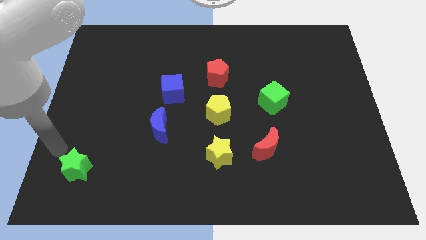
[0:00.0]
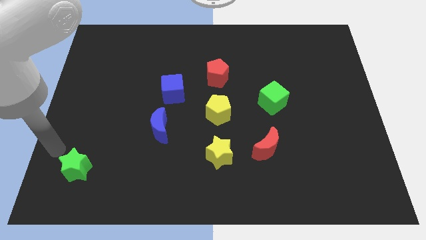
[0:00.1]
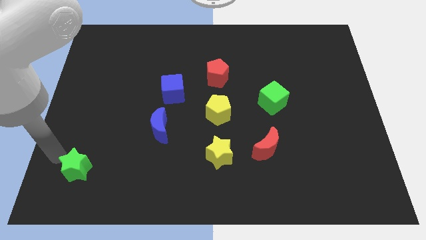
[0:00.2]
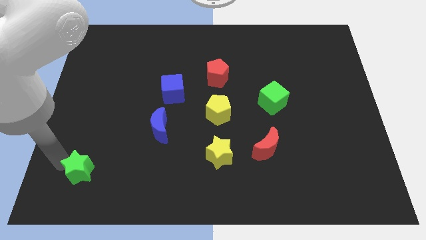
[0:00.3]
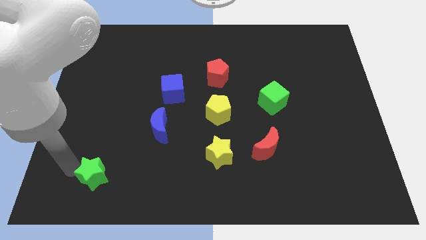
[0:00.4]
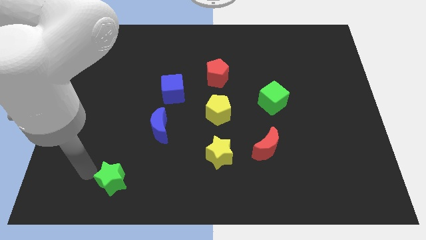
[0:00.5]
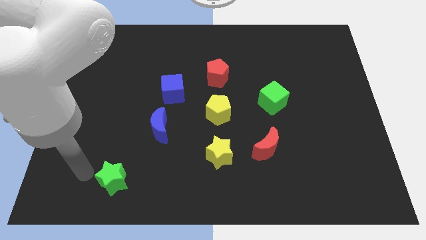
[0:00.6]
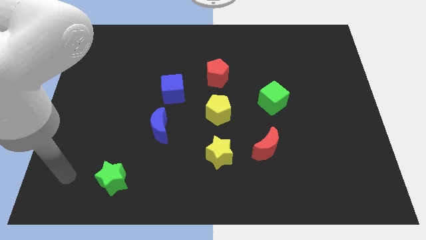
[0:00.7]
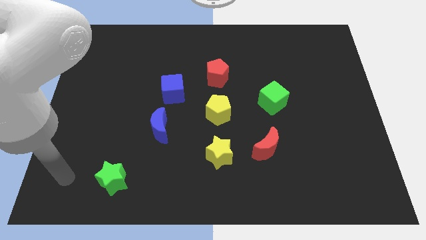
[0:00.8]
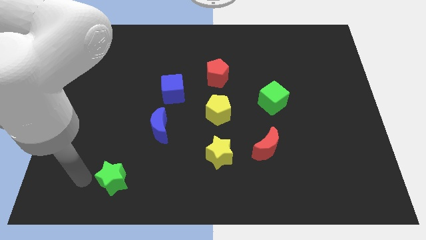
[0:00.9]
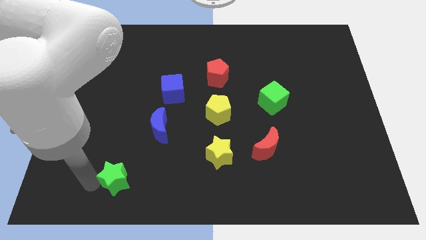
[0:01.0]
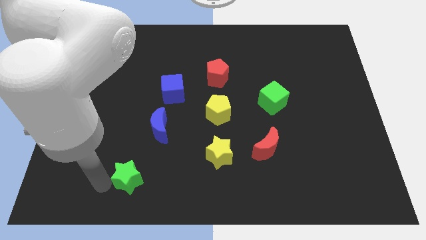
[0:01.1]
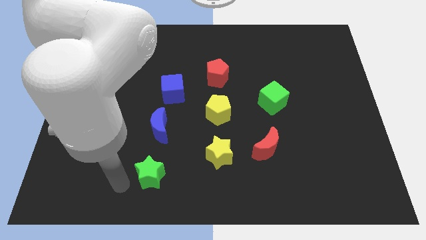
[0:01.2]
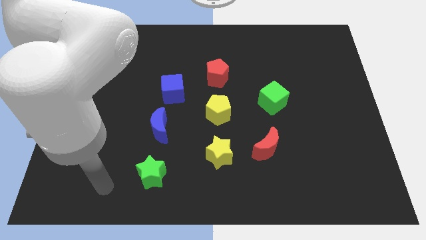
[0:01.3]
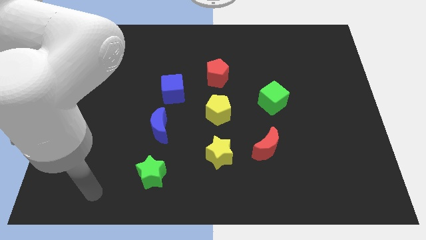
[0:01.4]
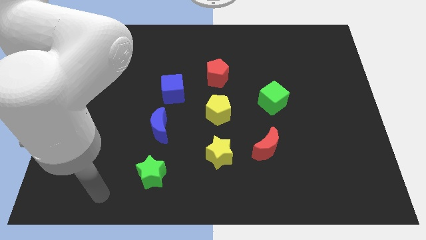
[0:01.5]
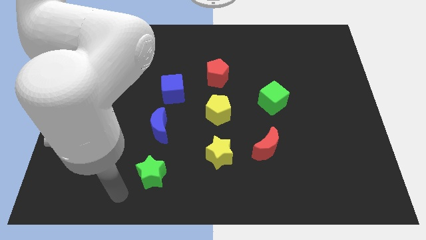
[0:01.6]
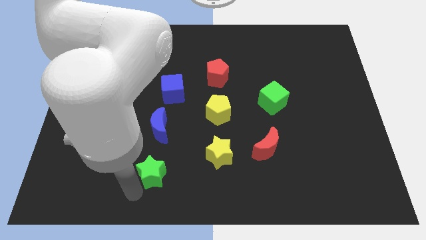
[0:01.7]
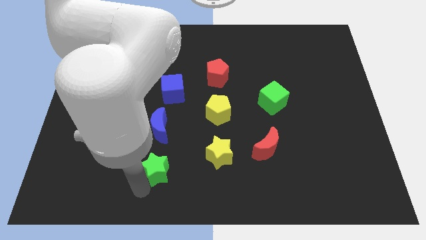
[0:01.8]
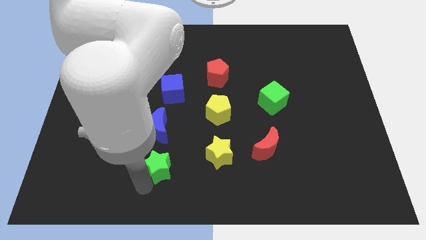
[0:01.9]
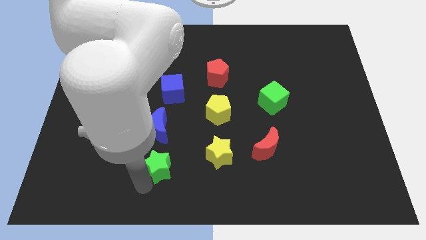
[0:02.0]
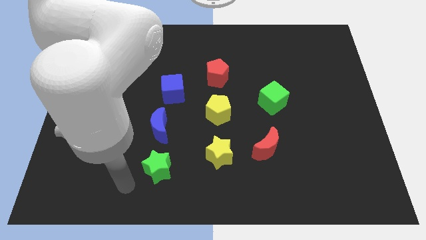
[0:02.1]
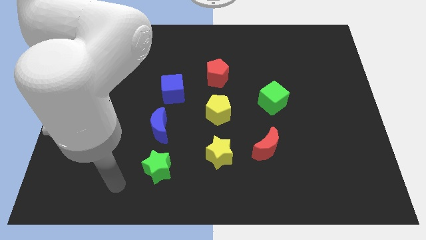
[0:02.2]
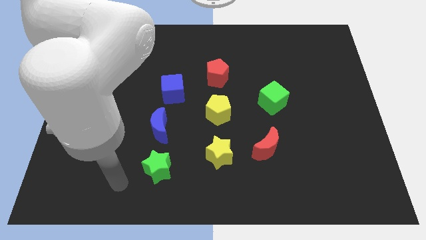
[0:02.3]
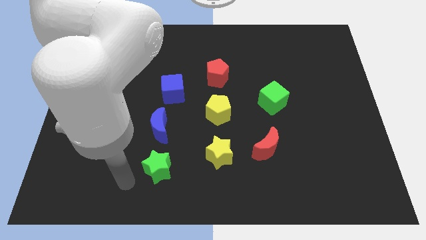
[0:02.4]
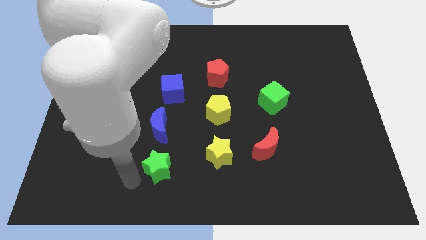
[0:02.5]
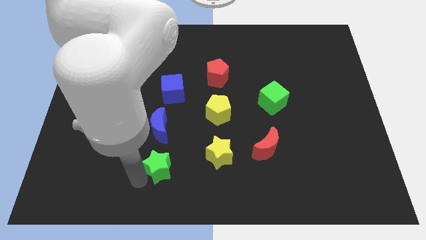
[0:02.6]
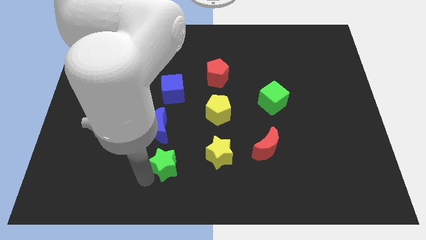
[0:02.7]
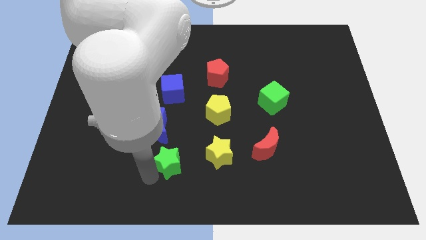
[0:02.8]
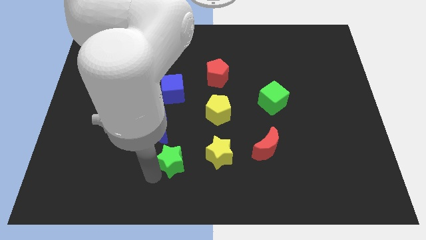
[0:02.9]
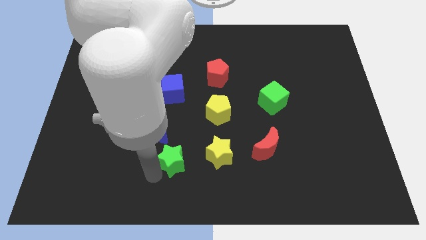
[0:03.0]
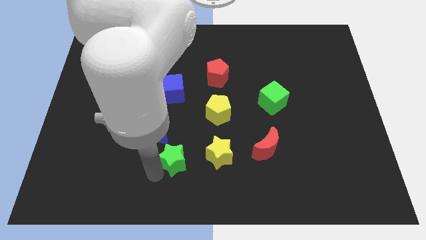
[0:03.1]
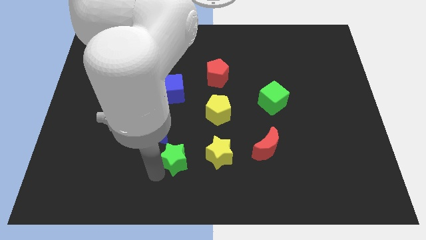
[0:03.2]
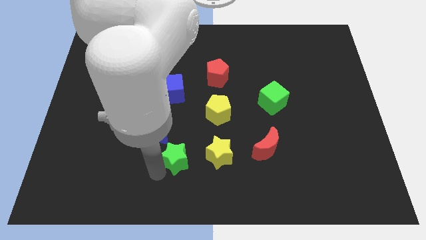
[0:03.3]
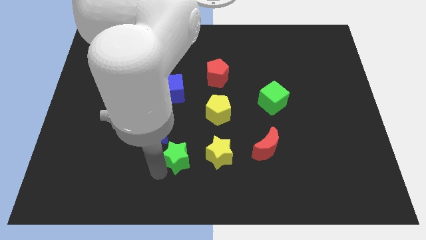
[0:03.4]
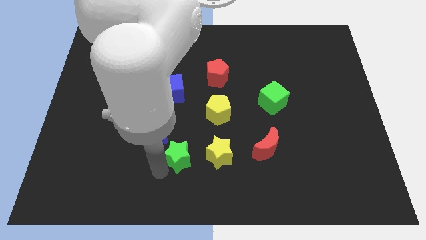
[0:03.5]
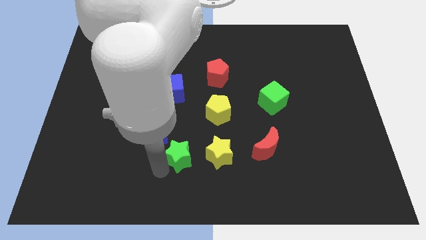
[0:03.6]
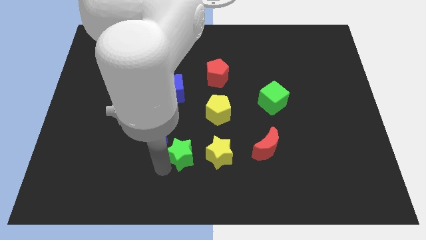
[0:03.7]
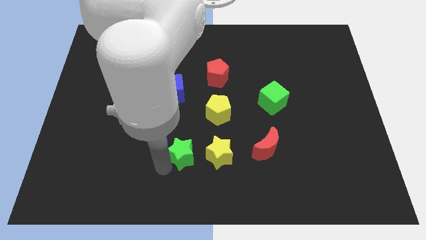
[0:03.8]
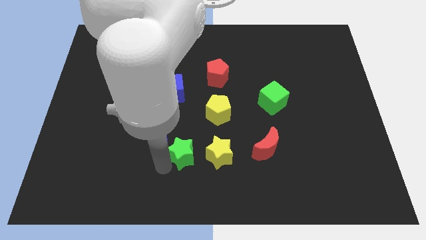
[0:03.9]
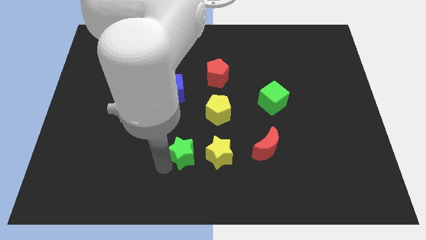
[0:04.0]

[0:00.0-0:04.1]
place green star to the left of yellow star

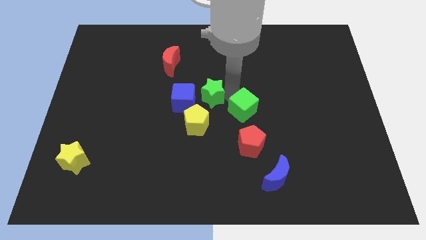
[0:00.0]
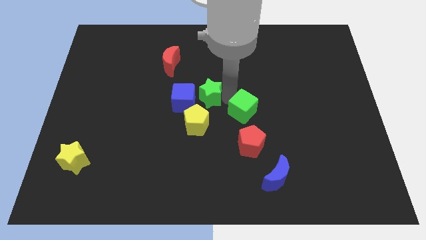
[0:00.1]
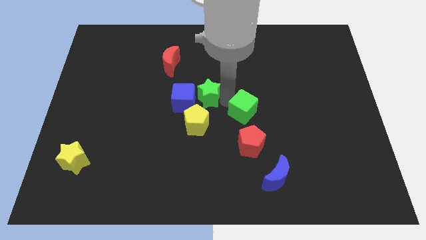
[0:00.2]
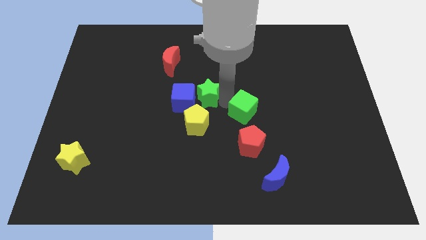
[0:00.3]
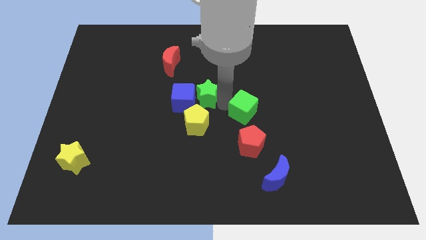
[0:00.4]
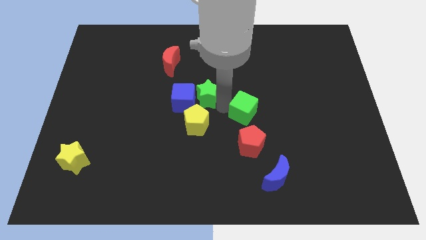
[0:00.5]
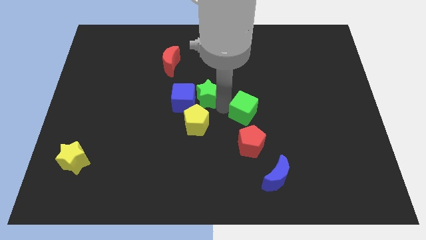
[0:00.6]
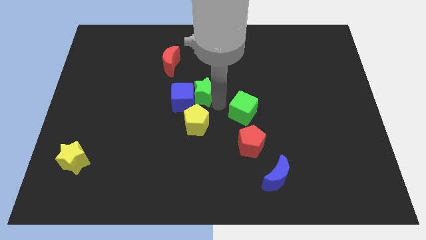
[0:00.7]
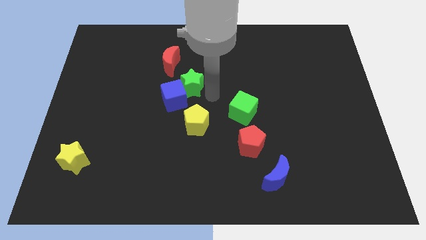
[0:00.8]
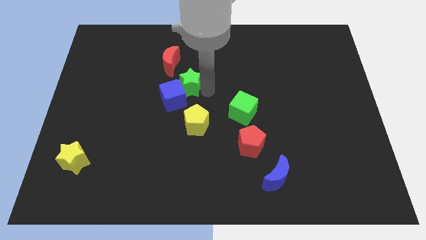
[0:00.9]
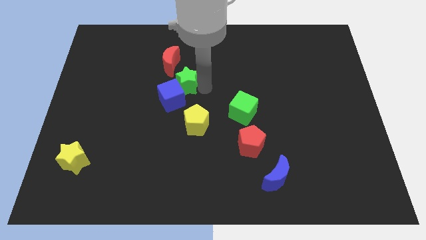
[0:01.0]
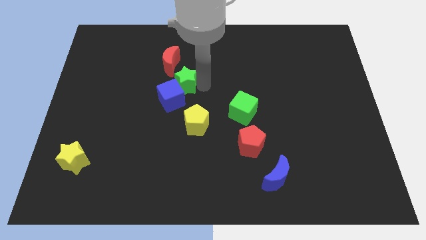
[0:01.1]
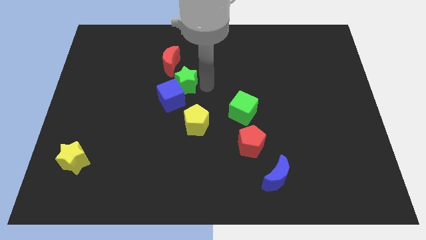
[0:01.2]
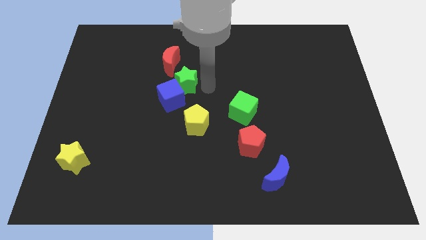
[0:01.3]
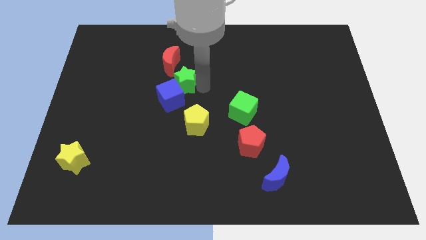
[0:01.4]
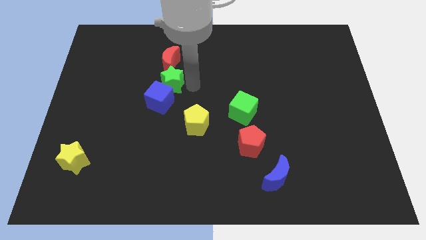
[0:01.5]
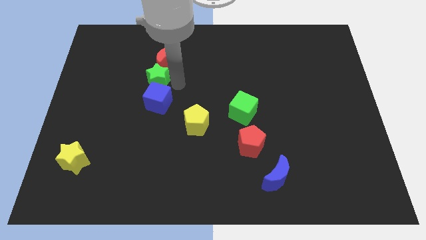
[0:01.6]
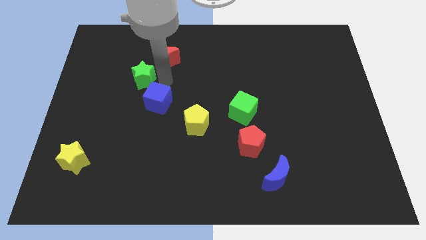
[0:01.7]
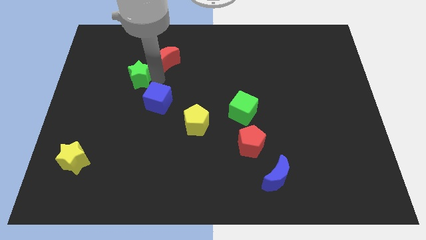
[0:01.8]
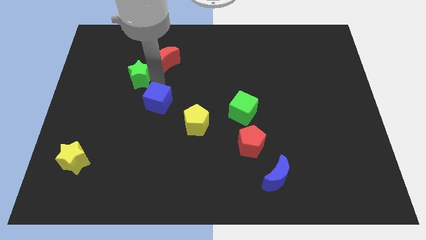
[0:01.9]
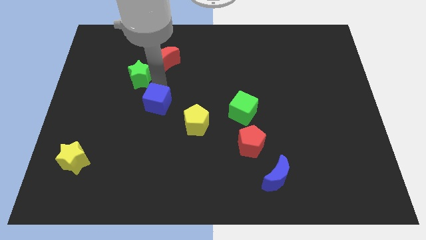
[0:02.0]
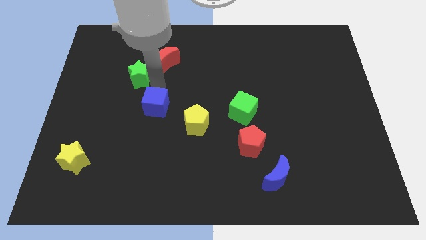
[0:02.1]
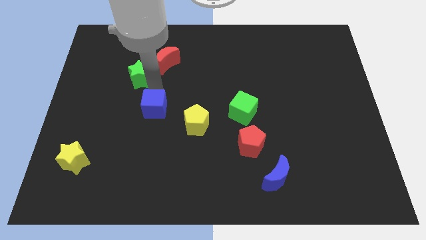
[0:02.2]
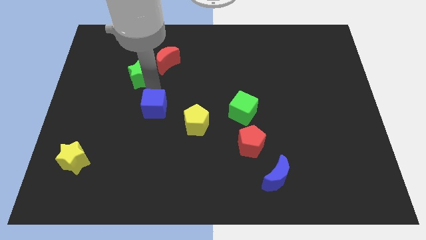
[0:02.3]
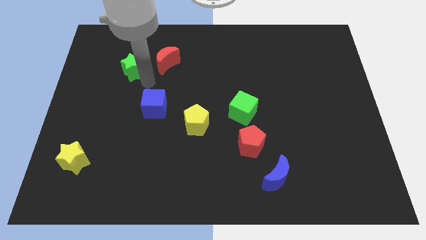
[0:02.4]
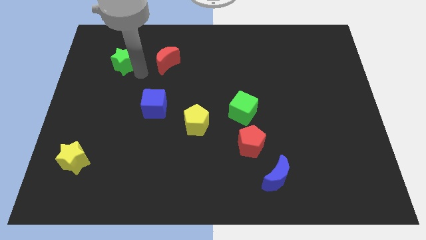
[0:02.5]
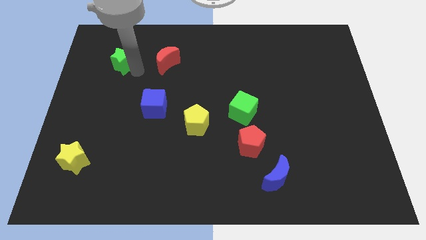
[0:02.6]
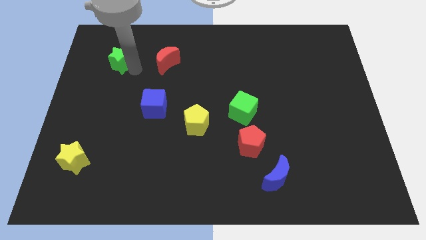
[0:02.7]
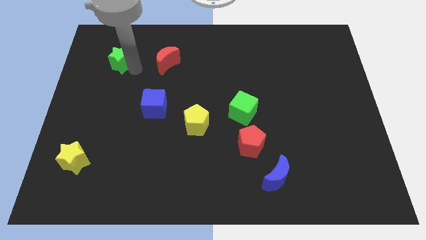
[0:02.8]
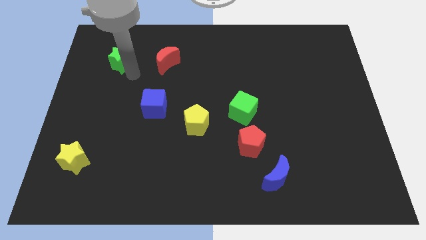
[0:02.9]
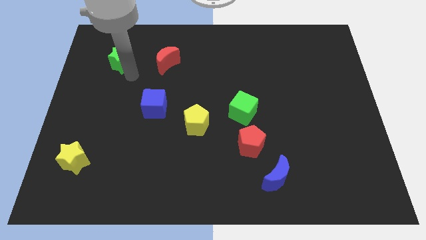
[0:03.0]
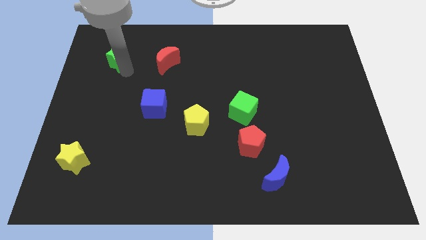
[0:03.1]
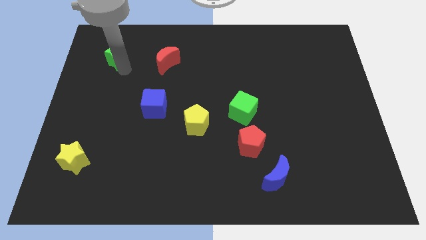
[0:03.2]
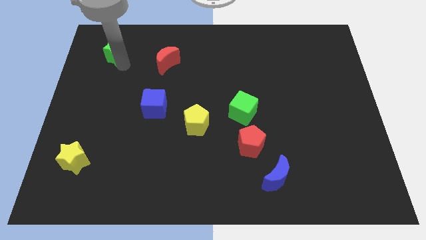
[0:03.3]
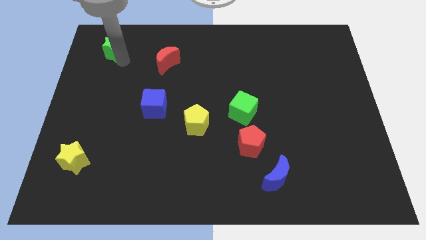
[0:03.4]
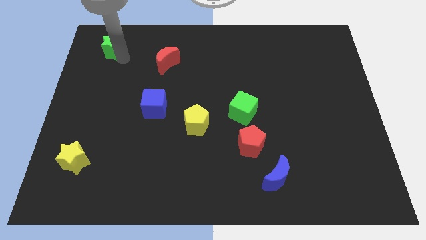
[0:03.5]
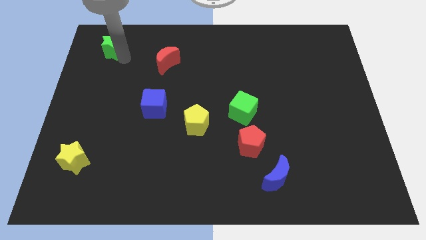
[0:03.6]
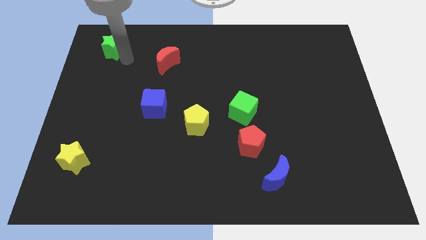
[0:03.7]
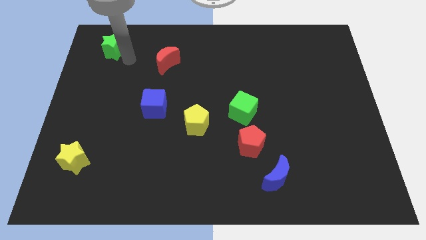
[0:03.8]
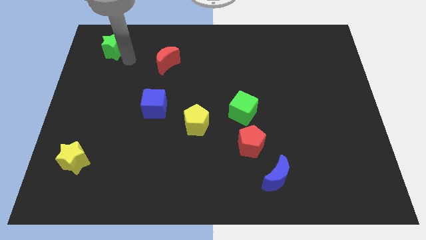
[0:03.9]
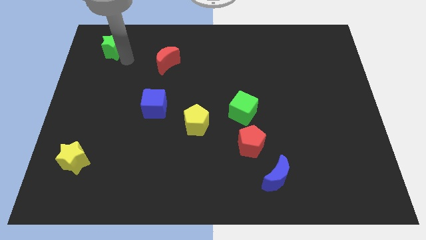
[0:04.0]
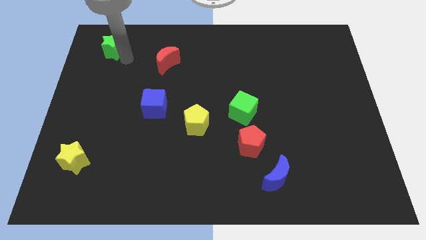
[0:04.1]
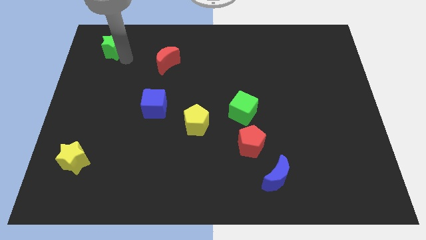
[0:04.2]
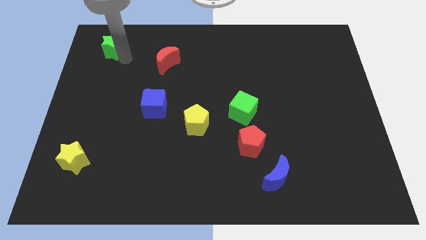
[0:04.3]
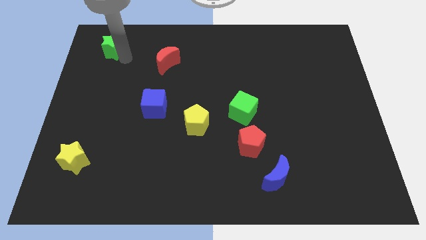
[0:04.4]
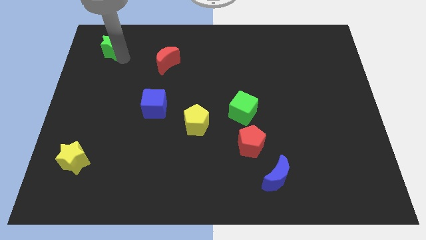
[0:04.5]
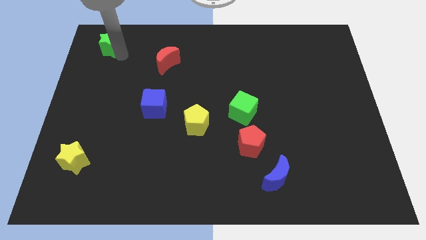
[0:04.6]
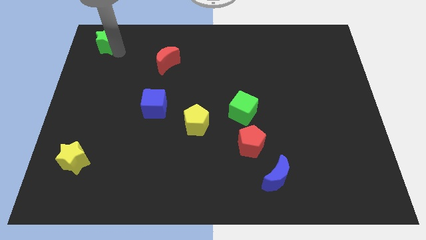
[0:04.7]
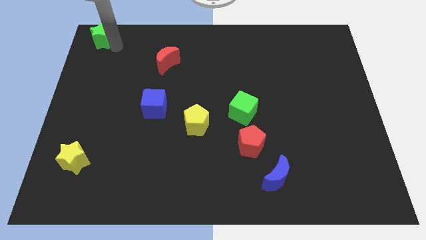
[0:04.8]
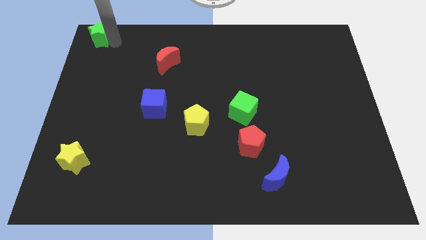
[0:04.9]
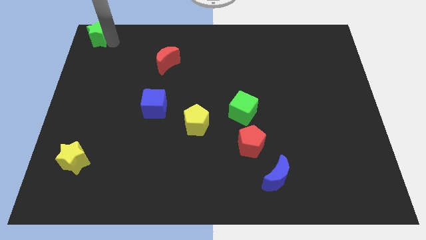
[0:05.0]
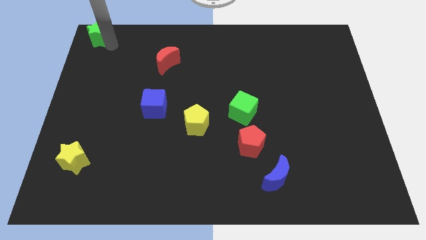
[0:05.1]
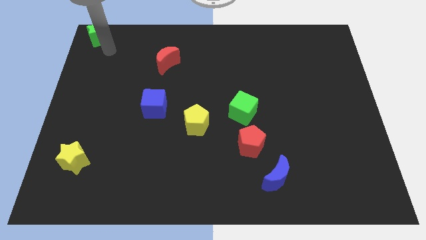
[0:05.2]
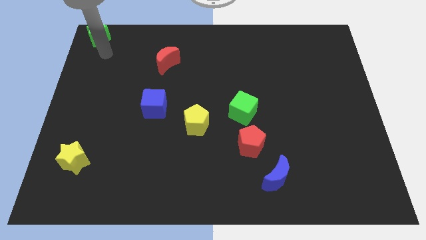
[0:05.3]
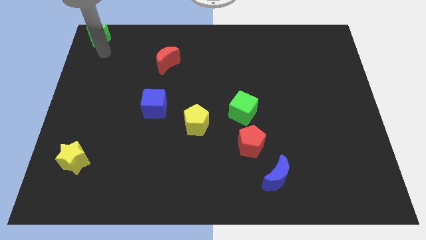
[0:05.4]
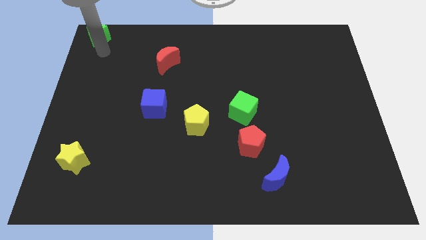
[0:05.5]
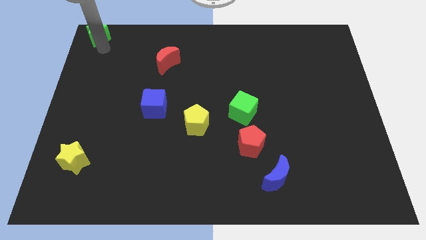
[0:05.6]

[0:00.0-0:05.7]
move the green star to the top left of the board
